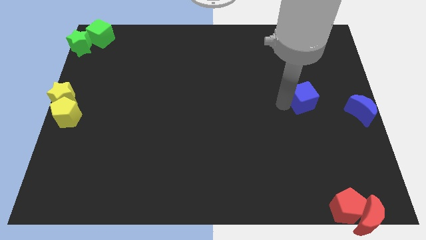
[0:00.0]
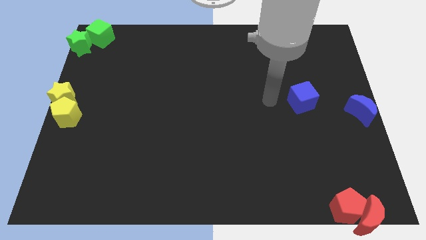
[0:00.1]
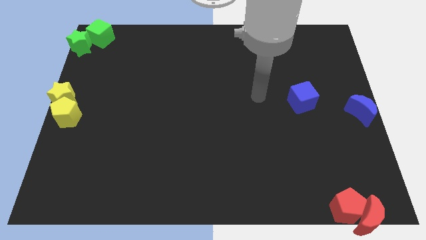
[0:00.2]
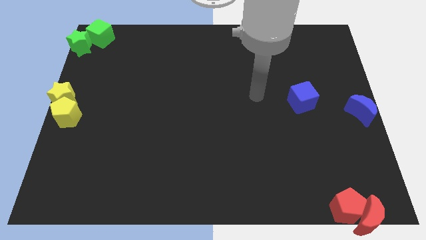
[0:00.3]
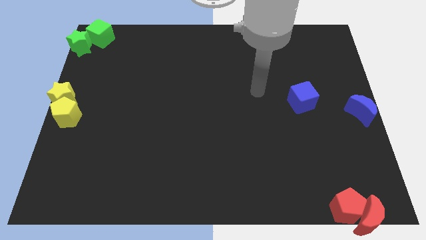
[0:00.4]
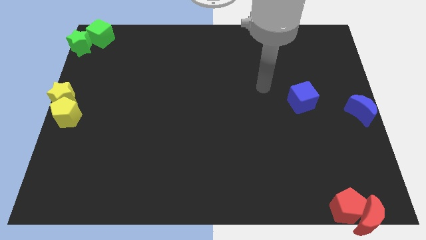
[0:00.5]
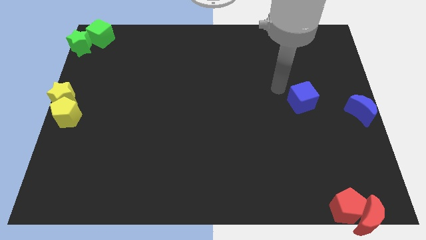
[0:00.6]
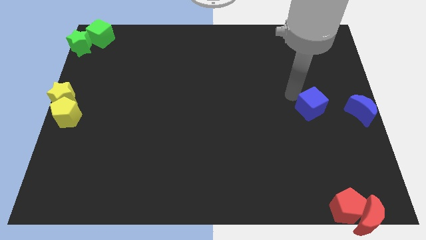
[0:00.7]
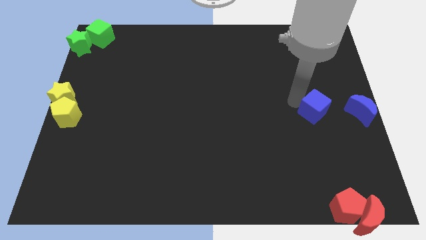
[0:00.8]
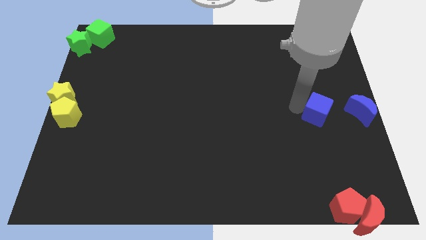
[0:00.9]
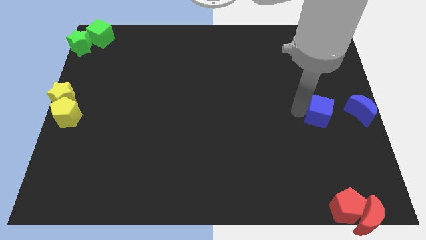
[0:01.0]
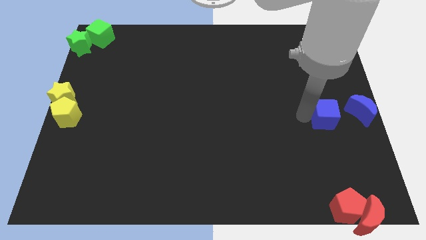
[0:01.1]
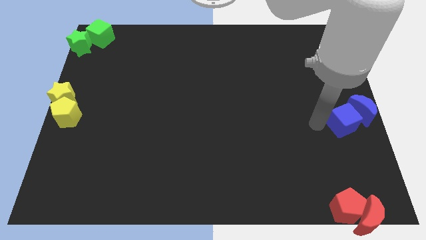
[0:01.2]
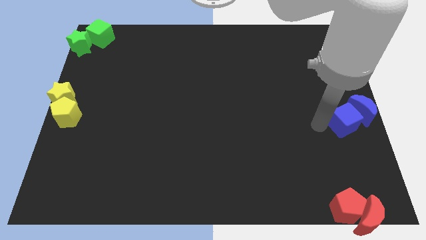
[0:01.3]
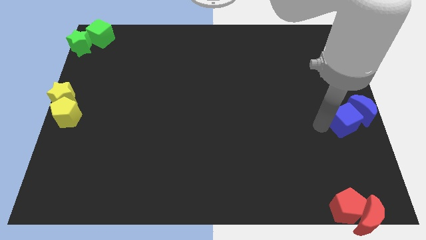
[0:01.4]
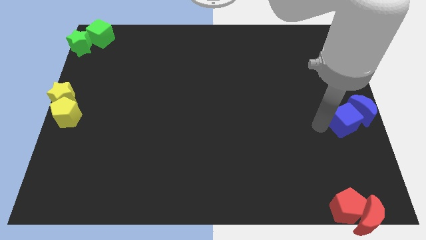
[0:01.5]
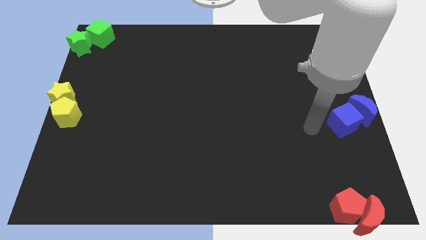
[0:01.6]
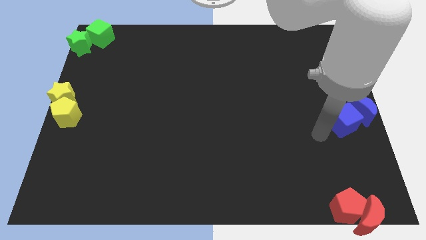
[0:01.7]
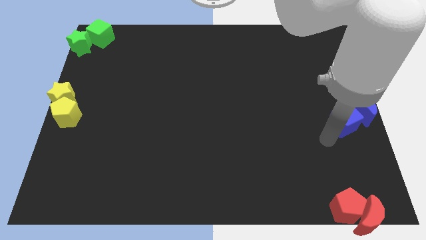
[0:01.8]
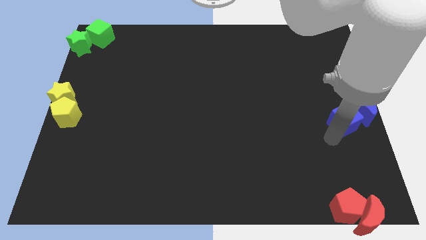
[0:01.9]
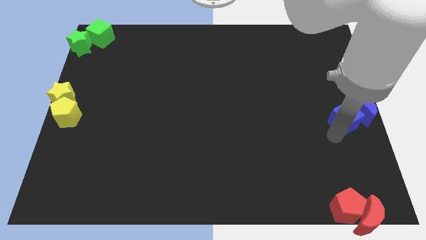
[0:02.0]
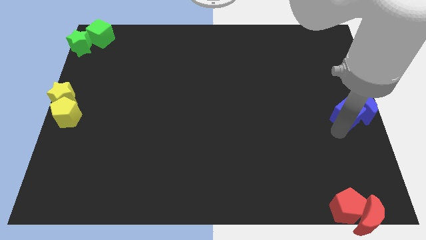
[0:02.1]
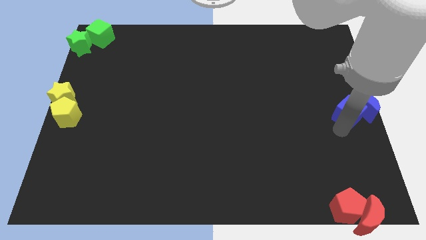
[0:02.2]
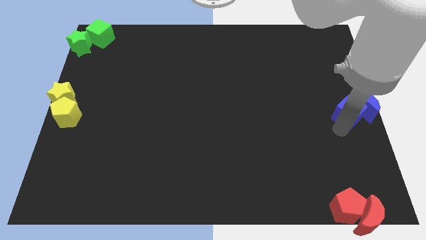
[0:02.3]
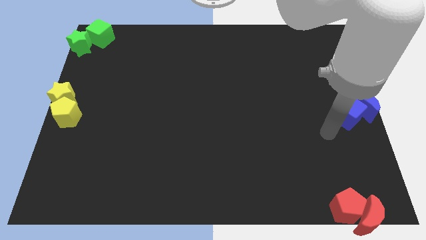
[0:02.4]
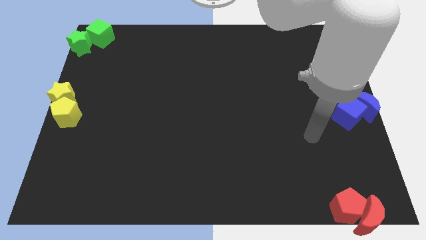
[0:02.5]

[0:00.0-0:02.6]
put the blue cube at the center right

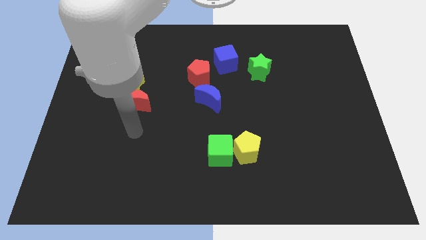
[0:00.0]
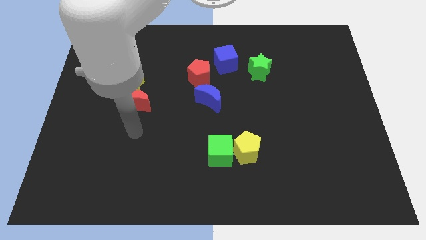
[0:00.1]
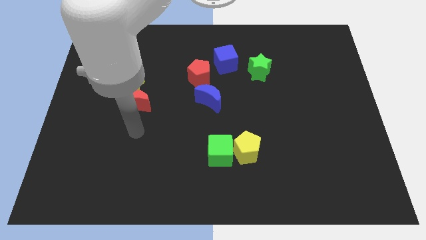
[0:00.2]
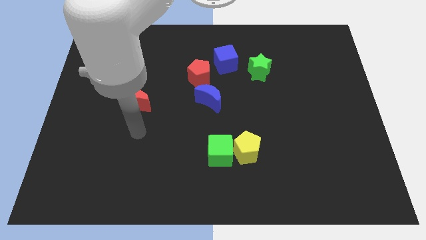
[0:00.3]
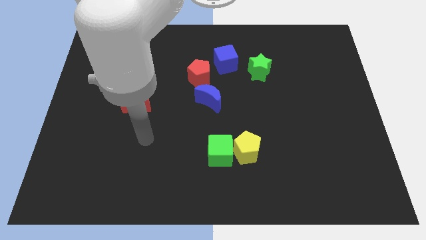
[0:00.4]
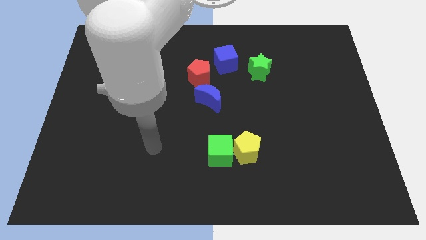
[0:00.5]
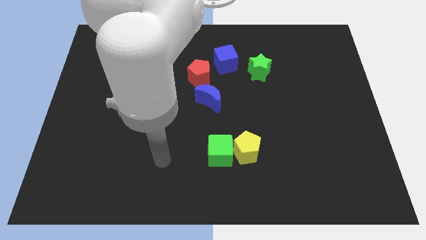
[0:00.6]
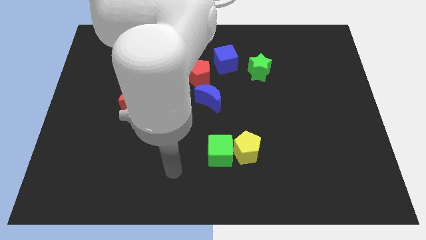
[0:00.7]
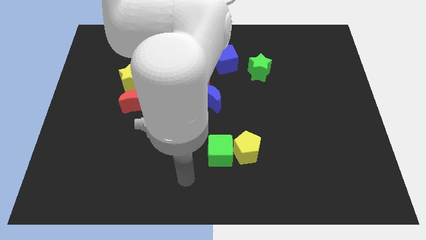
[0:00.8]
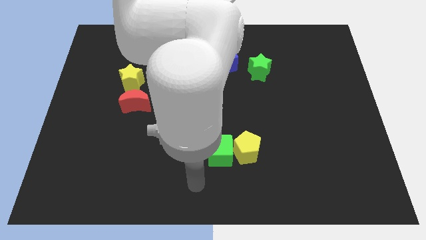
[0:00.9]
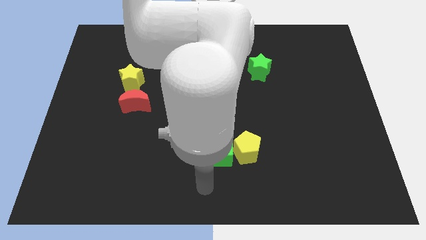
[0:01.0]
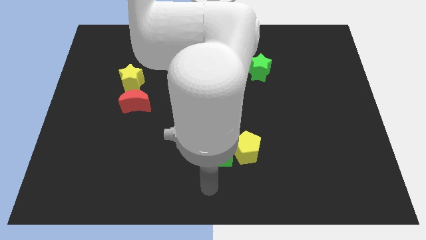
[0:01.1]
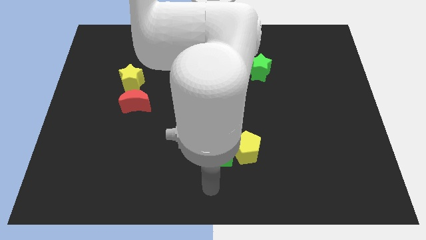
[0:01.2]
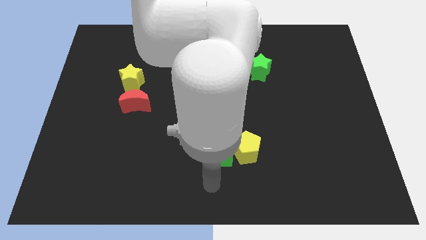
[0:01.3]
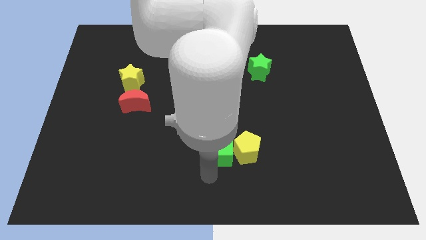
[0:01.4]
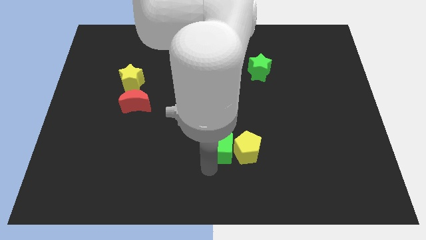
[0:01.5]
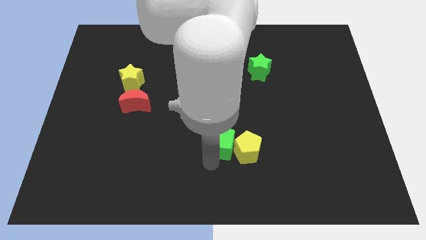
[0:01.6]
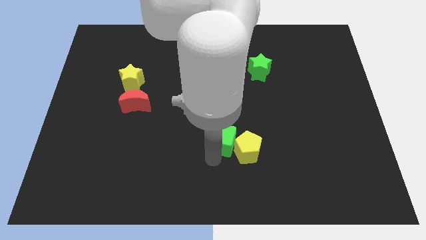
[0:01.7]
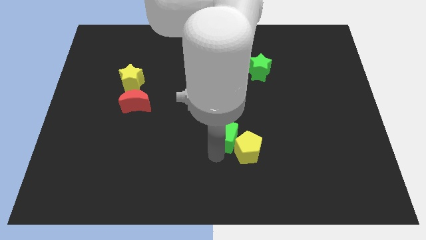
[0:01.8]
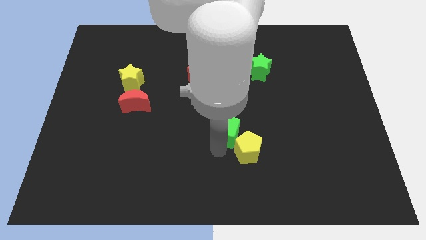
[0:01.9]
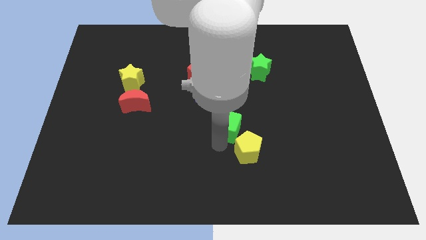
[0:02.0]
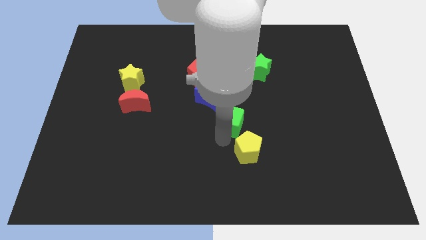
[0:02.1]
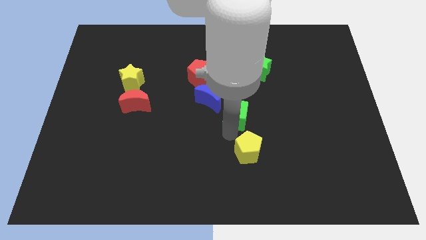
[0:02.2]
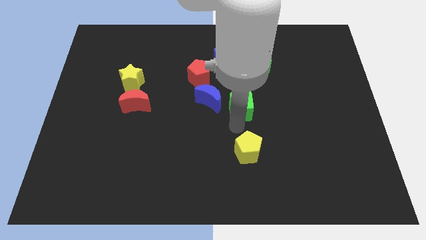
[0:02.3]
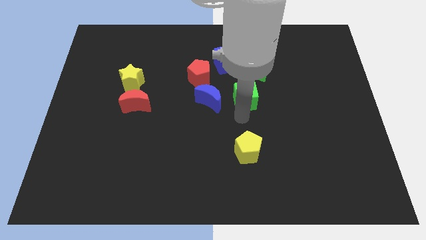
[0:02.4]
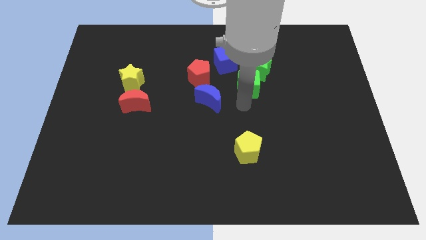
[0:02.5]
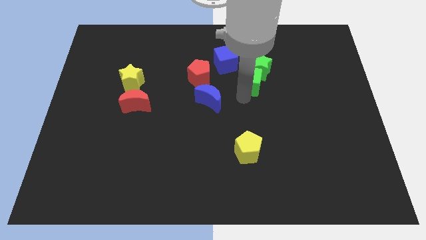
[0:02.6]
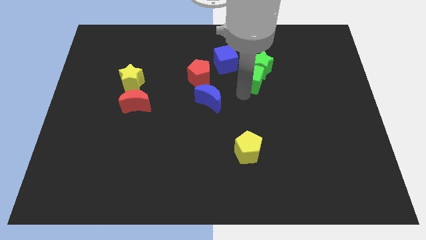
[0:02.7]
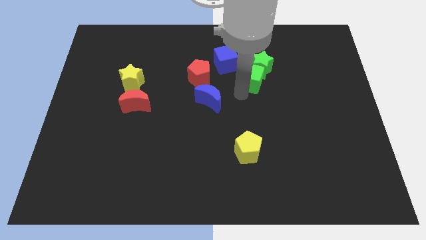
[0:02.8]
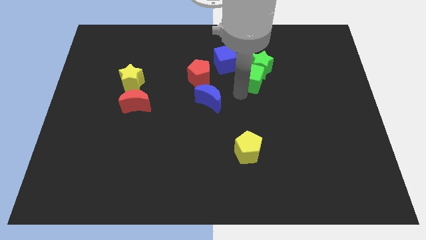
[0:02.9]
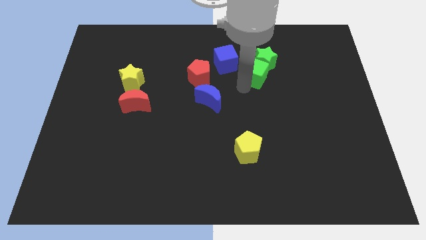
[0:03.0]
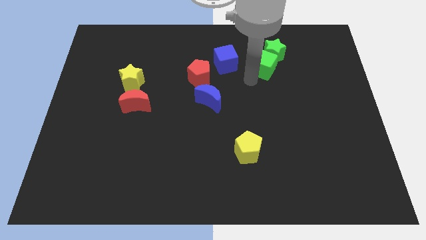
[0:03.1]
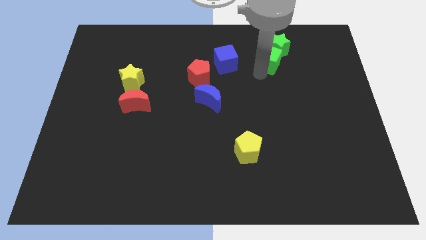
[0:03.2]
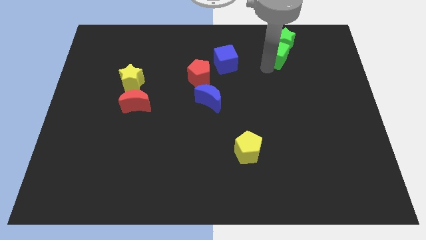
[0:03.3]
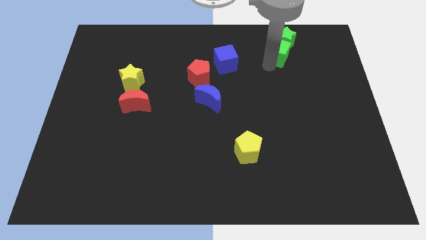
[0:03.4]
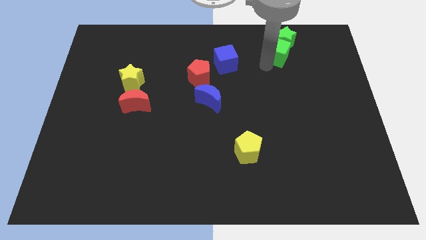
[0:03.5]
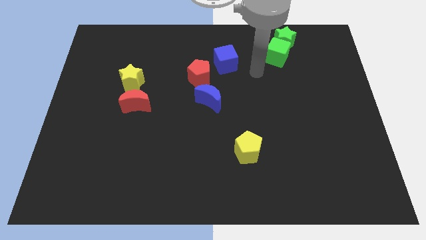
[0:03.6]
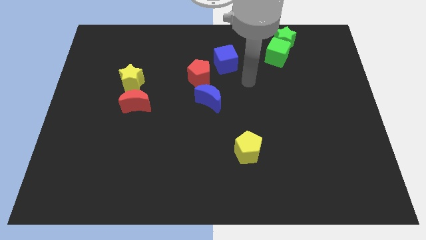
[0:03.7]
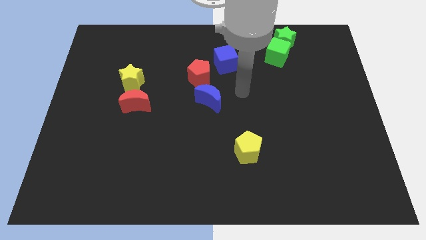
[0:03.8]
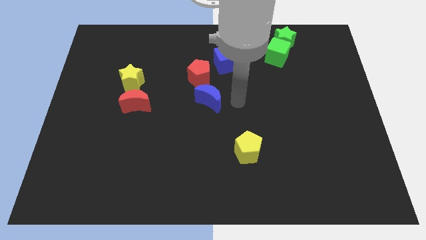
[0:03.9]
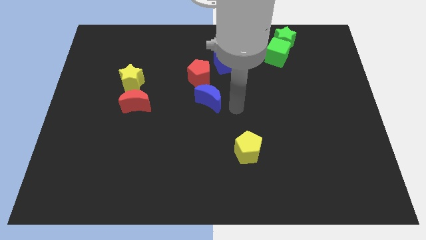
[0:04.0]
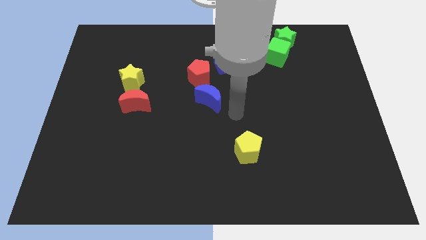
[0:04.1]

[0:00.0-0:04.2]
push the green cube into the green star

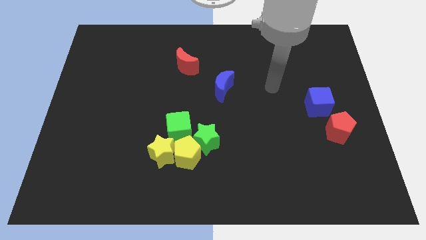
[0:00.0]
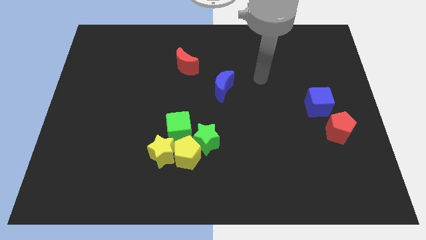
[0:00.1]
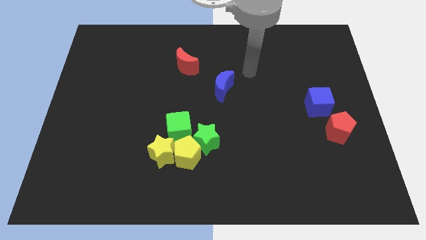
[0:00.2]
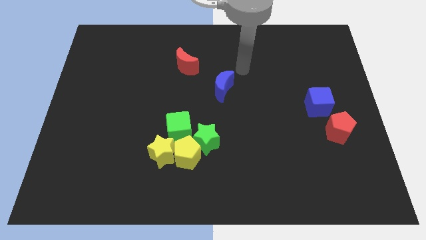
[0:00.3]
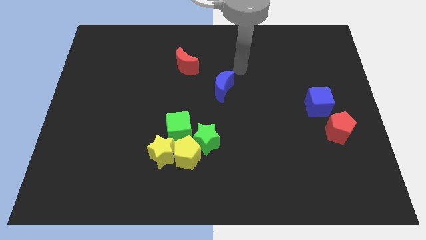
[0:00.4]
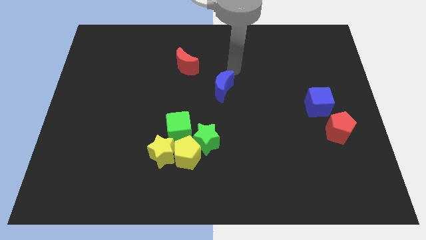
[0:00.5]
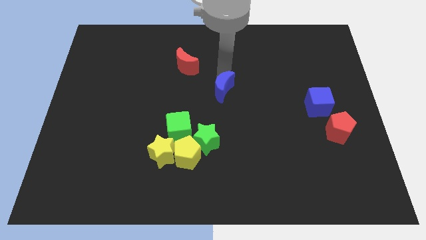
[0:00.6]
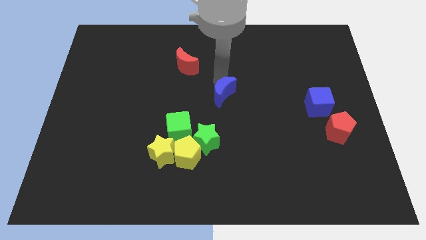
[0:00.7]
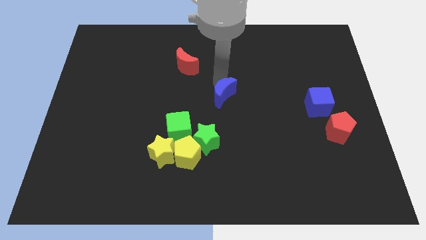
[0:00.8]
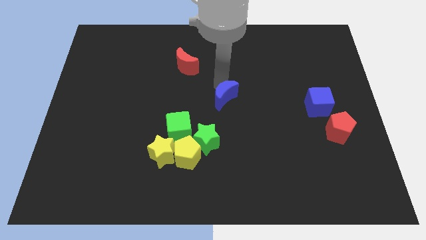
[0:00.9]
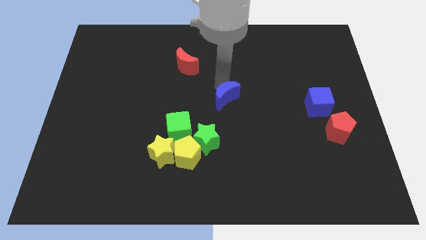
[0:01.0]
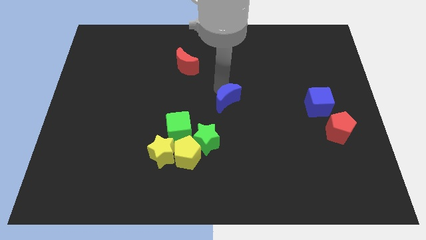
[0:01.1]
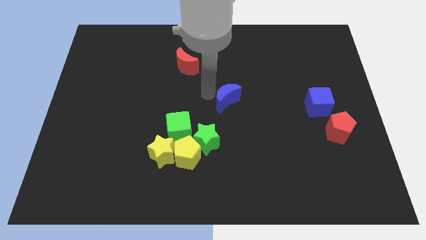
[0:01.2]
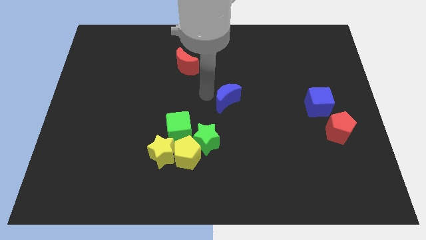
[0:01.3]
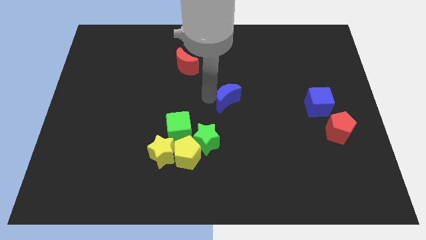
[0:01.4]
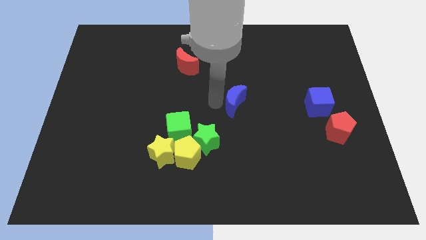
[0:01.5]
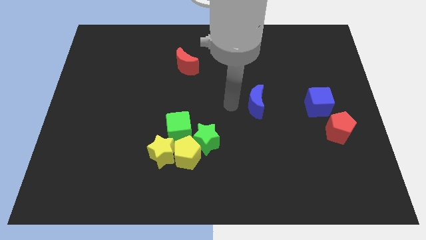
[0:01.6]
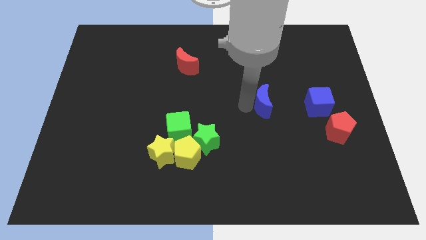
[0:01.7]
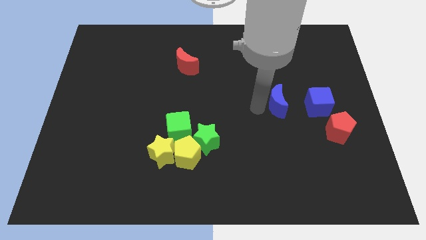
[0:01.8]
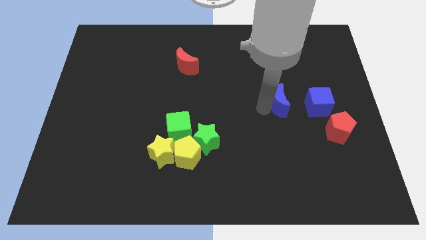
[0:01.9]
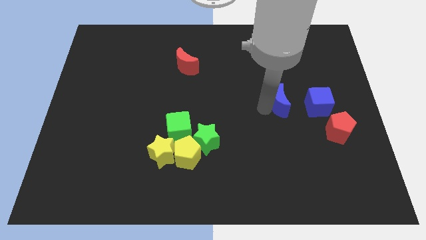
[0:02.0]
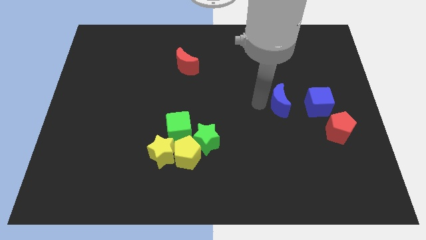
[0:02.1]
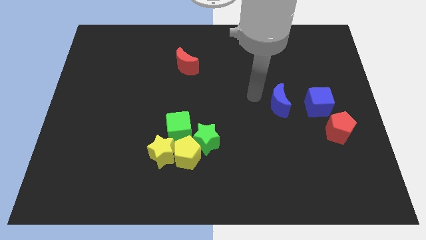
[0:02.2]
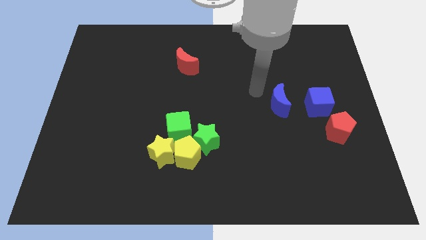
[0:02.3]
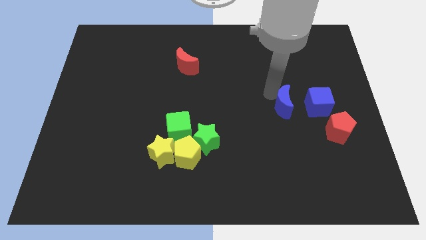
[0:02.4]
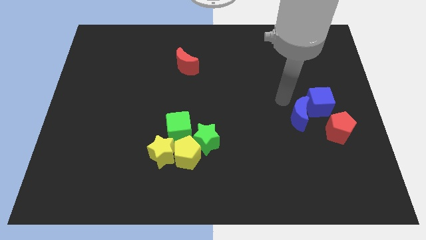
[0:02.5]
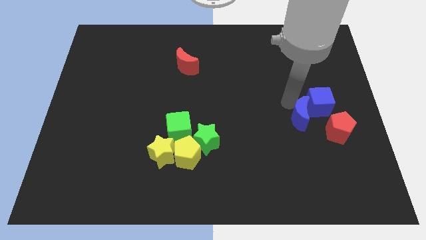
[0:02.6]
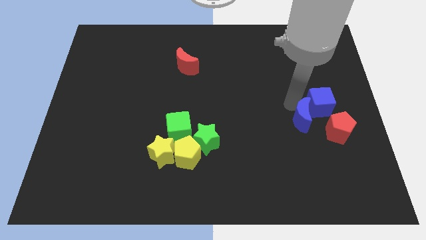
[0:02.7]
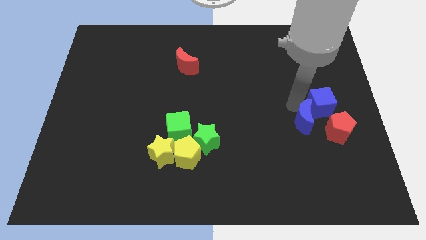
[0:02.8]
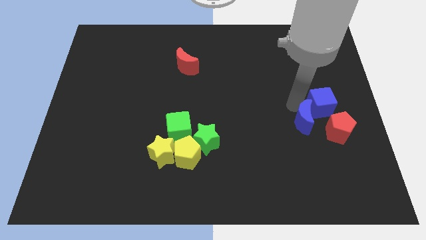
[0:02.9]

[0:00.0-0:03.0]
move blue moon in to blue cube
